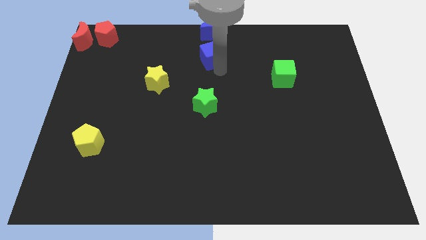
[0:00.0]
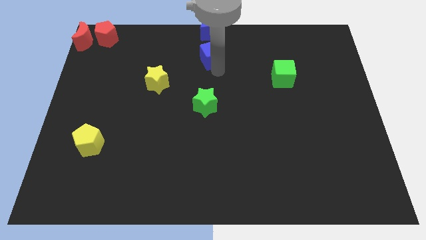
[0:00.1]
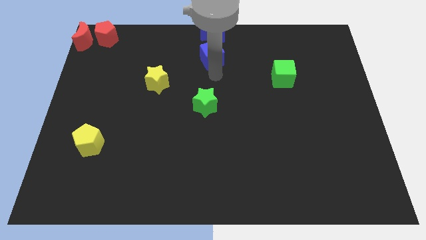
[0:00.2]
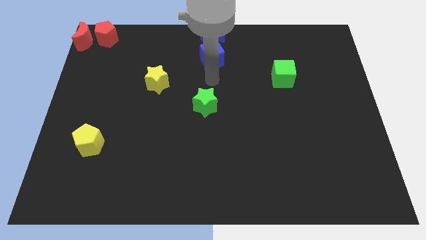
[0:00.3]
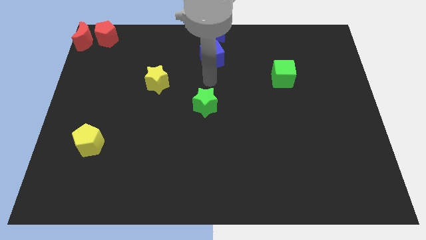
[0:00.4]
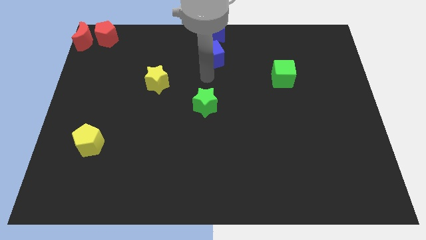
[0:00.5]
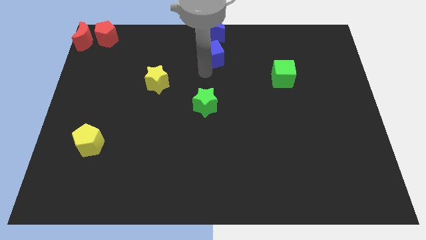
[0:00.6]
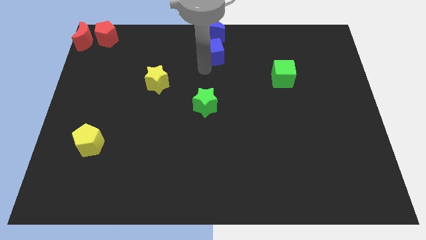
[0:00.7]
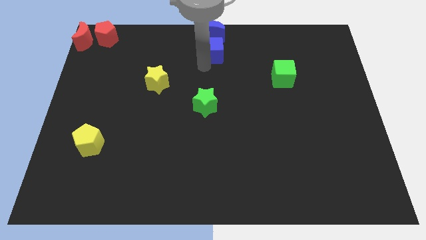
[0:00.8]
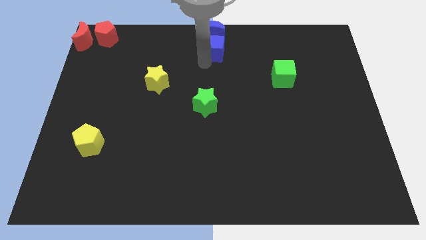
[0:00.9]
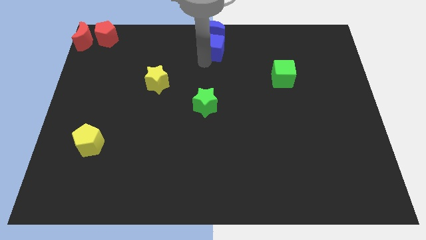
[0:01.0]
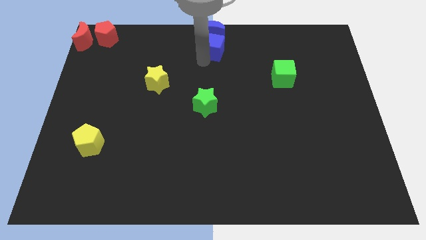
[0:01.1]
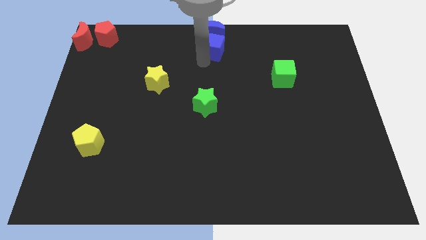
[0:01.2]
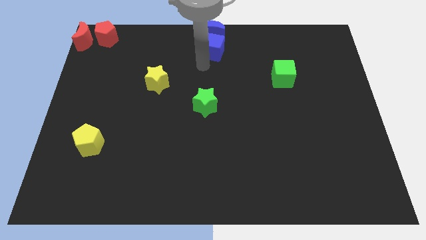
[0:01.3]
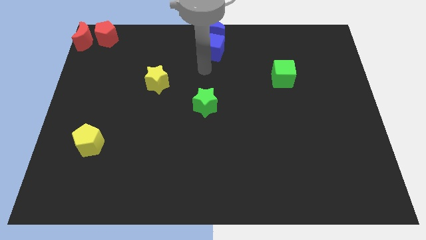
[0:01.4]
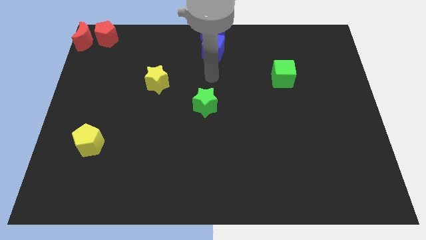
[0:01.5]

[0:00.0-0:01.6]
place the blue cube bottom to the blue crescent

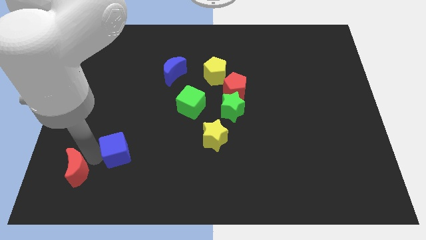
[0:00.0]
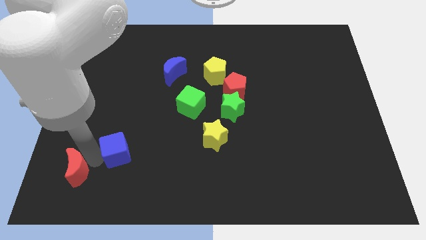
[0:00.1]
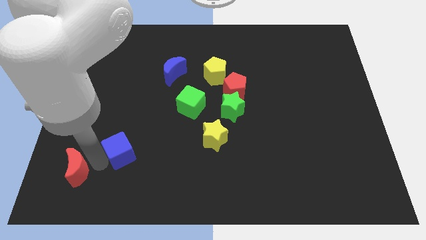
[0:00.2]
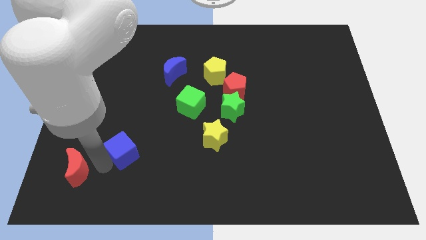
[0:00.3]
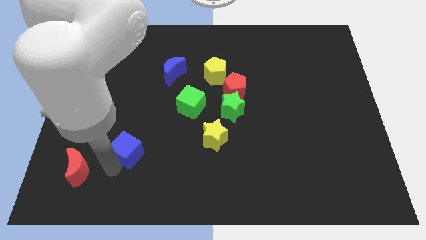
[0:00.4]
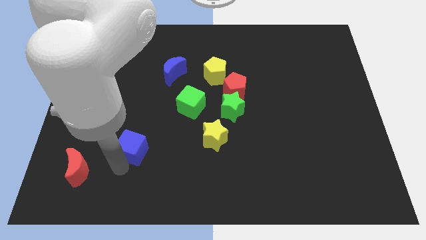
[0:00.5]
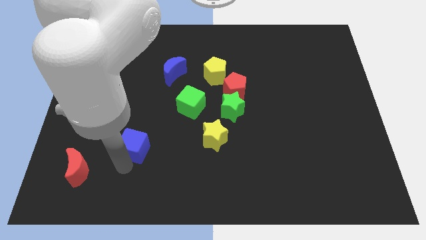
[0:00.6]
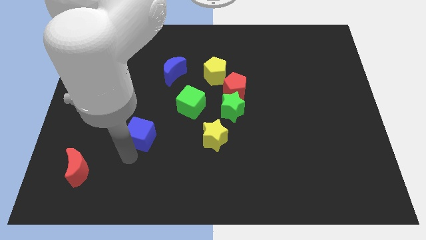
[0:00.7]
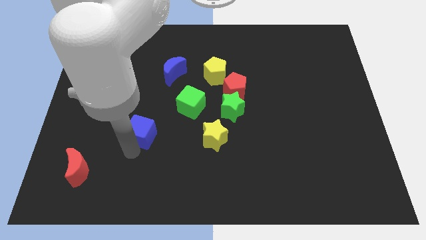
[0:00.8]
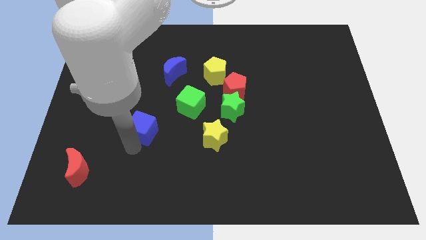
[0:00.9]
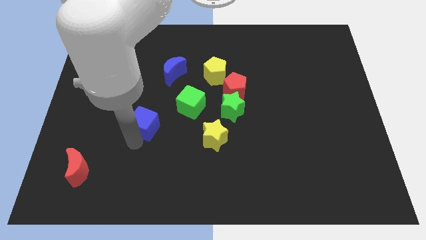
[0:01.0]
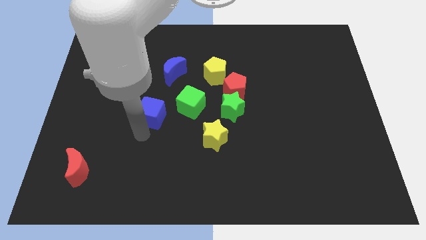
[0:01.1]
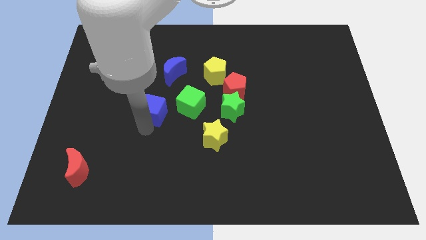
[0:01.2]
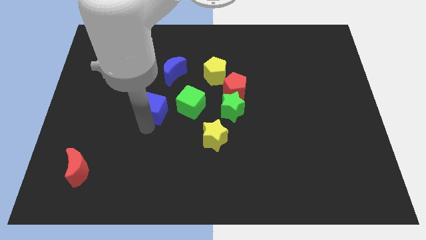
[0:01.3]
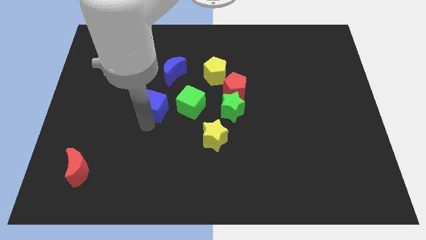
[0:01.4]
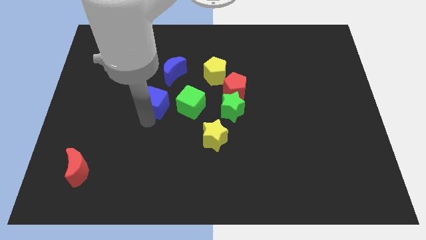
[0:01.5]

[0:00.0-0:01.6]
place the blue cube left to the green cube

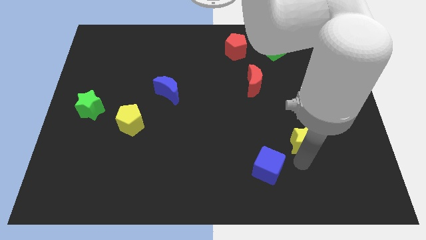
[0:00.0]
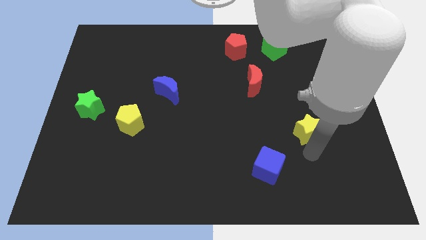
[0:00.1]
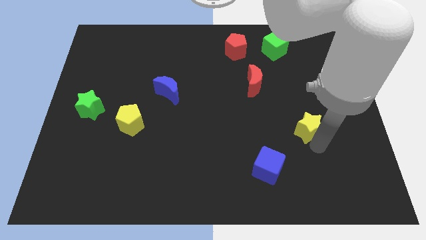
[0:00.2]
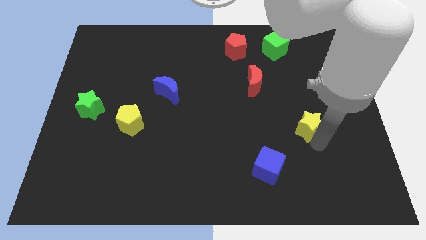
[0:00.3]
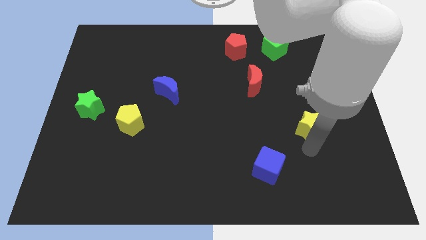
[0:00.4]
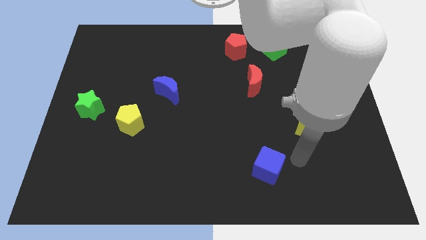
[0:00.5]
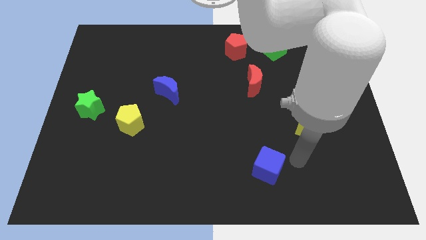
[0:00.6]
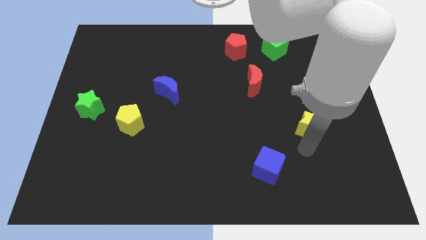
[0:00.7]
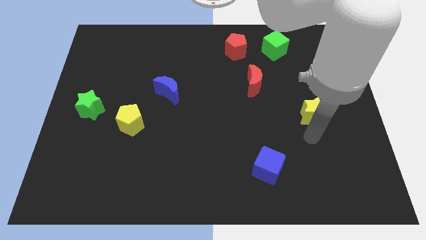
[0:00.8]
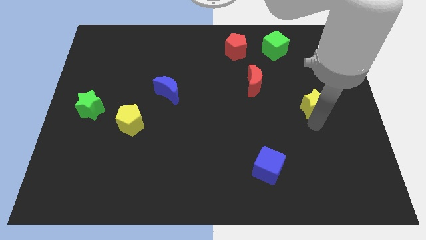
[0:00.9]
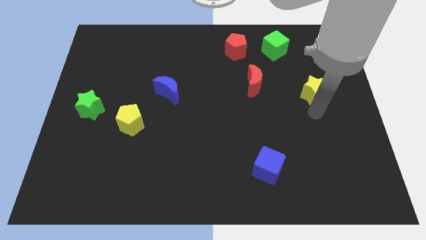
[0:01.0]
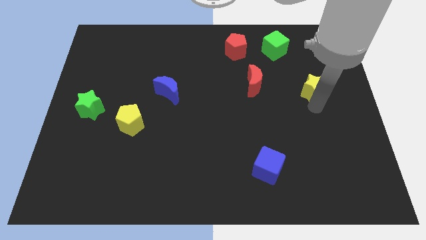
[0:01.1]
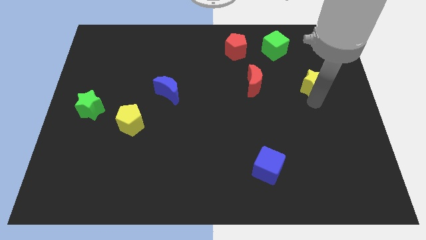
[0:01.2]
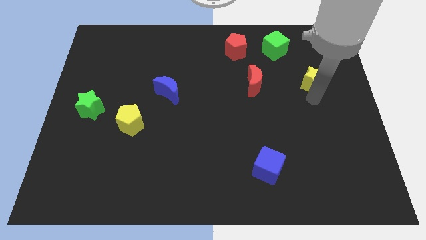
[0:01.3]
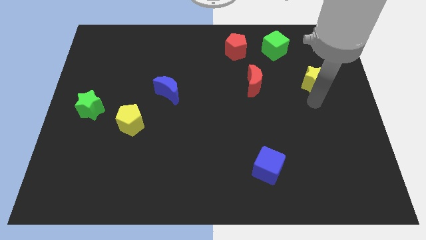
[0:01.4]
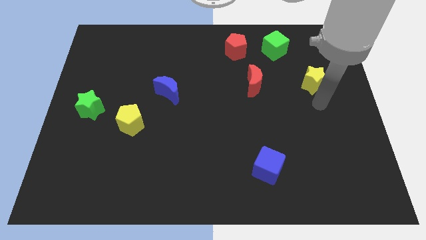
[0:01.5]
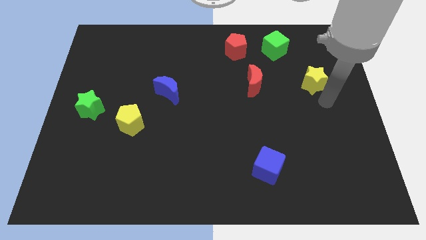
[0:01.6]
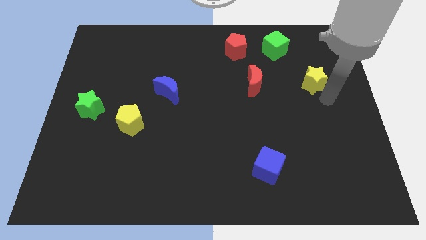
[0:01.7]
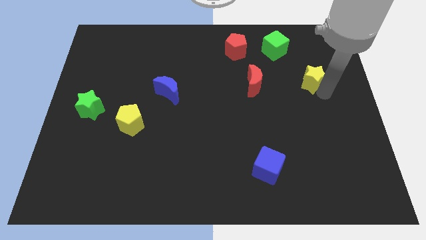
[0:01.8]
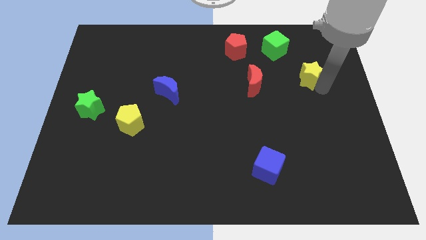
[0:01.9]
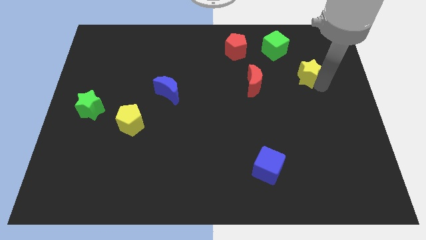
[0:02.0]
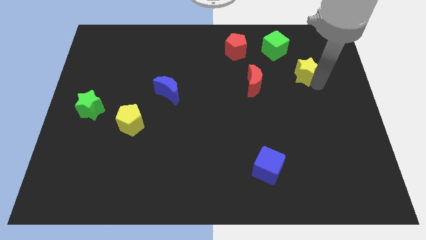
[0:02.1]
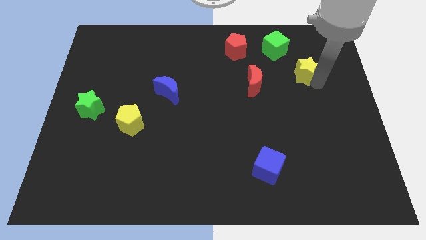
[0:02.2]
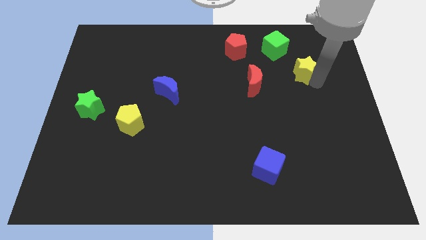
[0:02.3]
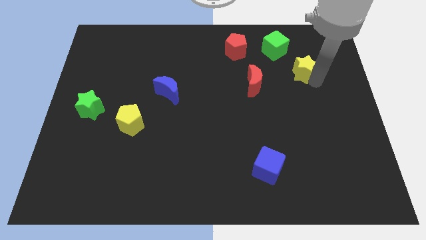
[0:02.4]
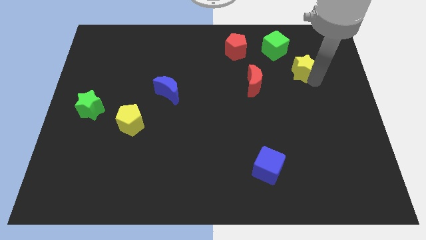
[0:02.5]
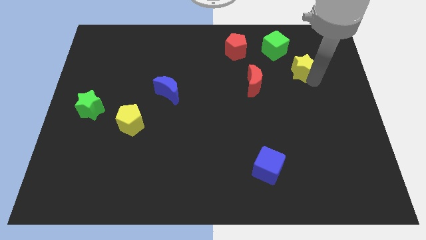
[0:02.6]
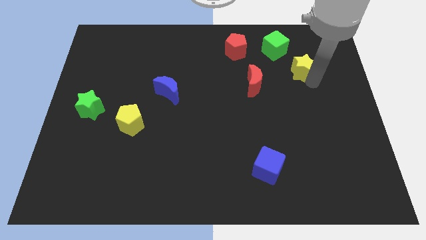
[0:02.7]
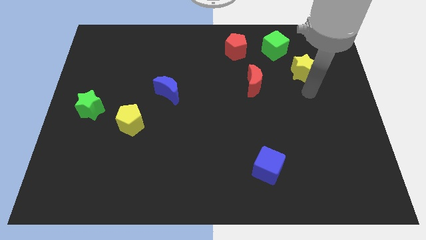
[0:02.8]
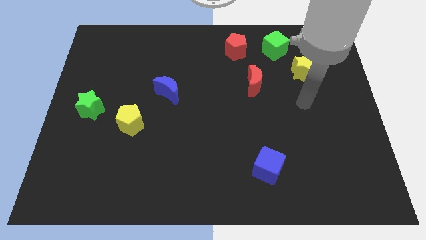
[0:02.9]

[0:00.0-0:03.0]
push the yellow star to the bottom right of the green cube

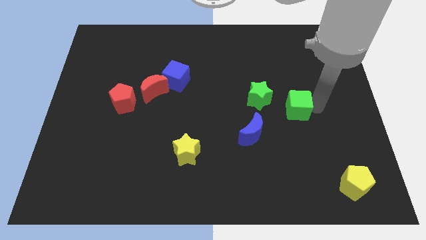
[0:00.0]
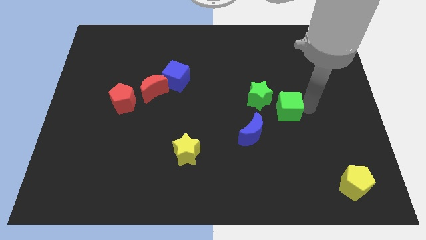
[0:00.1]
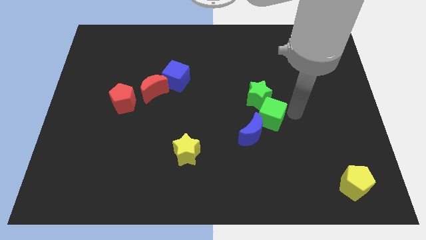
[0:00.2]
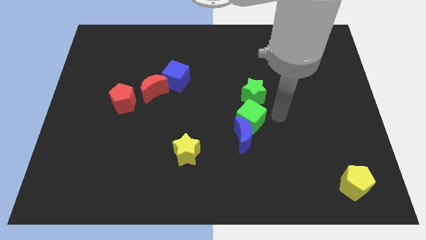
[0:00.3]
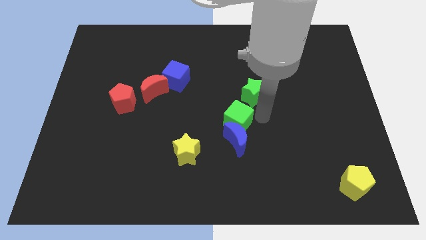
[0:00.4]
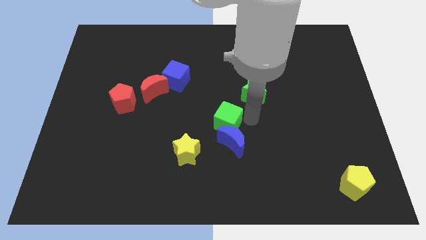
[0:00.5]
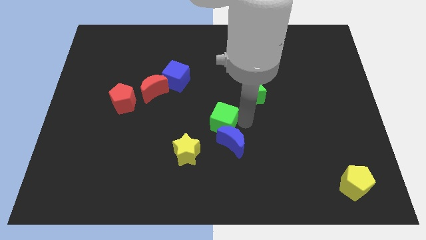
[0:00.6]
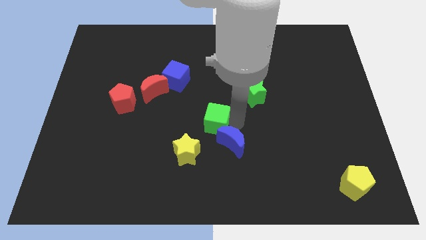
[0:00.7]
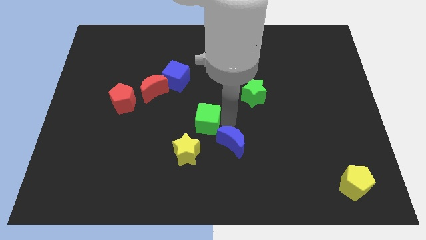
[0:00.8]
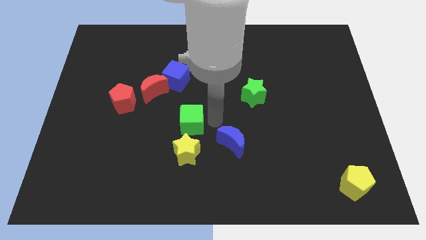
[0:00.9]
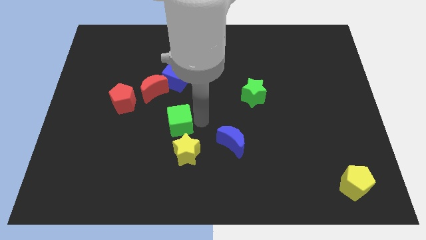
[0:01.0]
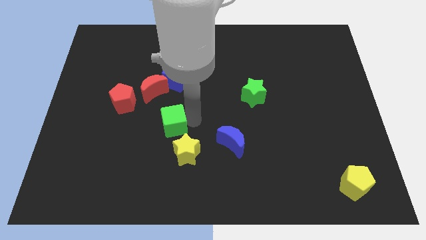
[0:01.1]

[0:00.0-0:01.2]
place green cube to the top of yellow star

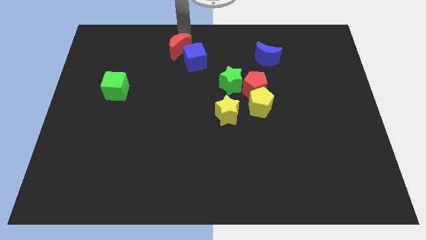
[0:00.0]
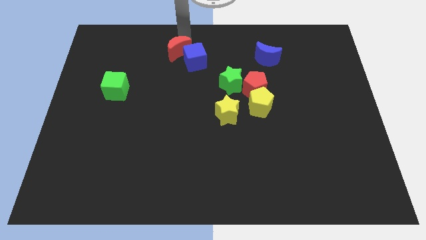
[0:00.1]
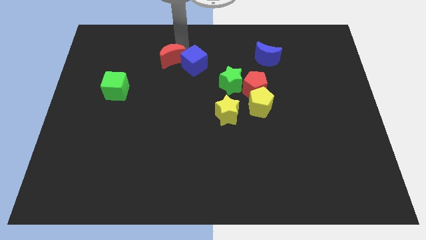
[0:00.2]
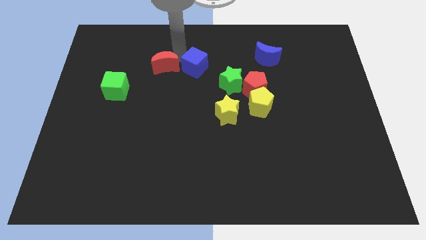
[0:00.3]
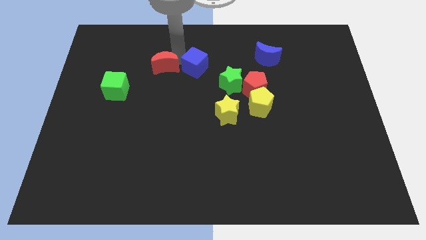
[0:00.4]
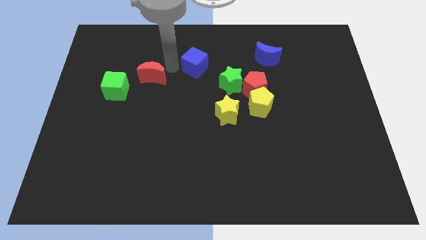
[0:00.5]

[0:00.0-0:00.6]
place red crescent in between green cube and blue cube

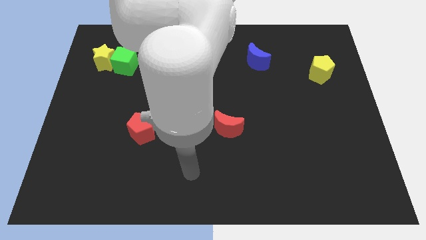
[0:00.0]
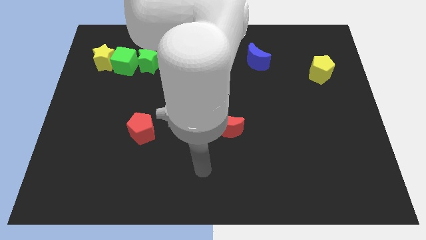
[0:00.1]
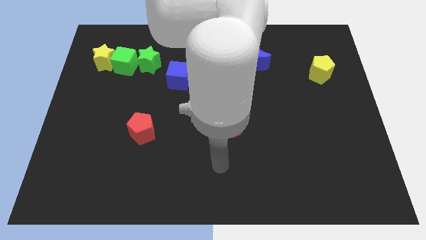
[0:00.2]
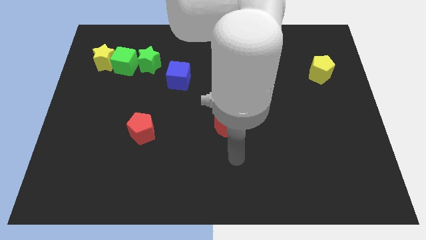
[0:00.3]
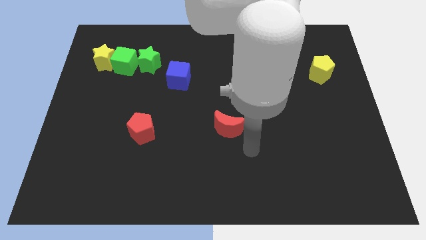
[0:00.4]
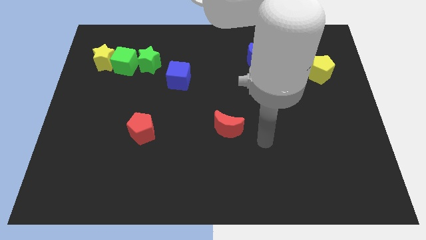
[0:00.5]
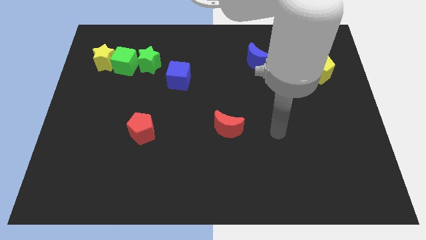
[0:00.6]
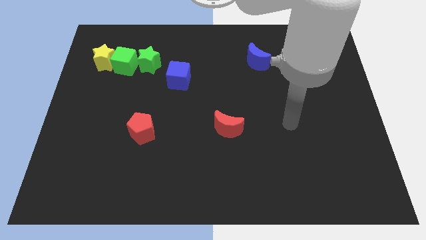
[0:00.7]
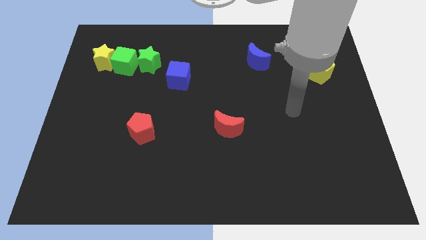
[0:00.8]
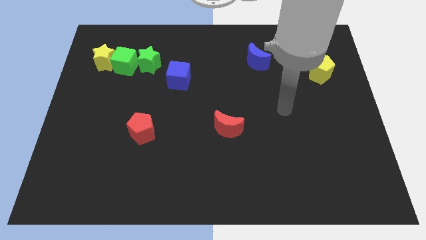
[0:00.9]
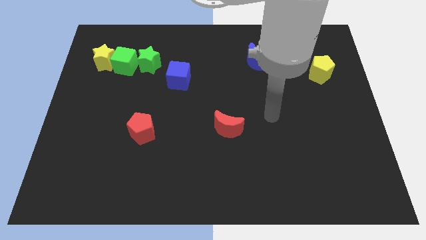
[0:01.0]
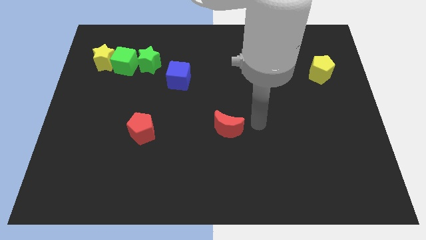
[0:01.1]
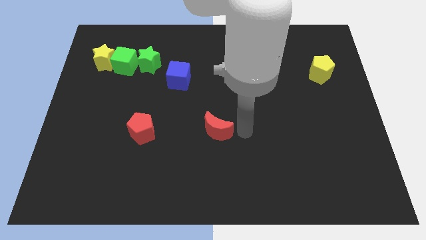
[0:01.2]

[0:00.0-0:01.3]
move the arm to the right side of the red moon
